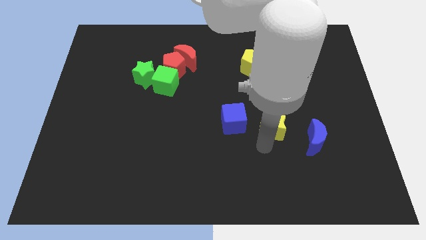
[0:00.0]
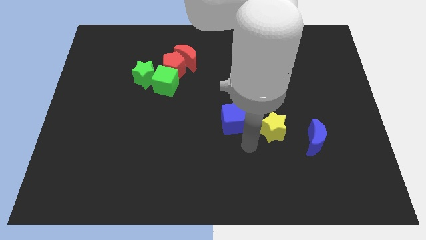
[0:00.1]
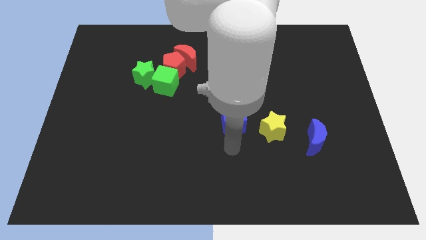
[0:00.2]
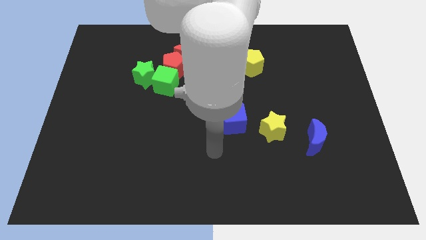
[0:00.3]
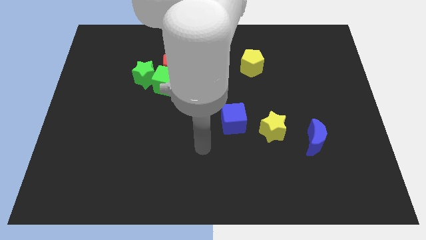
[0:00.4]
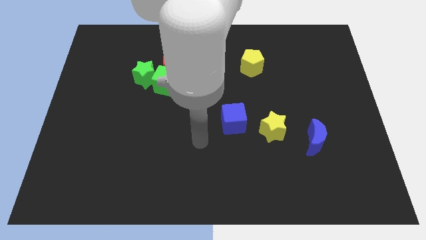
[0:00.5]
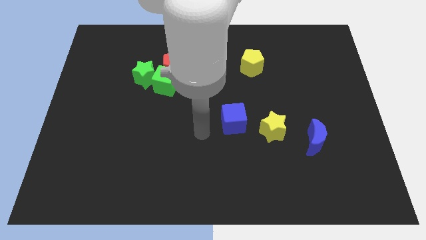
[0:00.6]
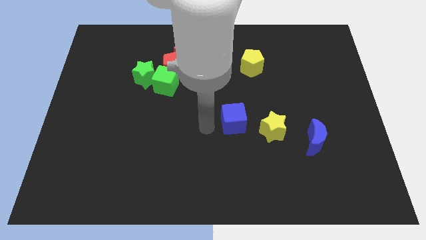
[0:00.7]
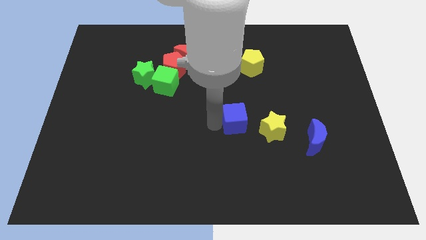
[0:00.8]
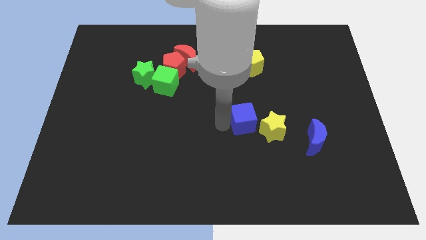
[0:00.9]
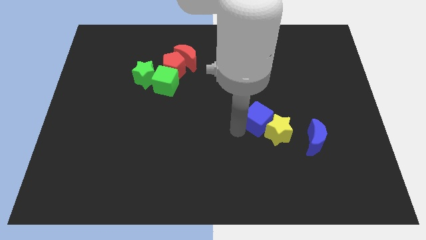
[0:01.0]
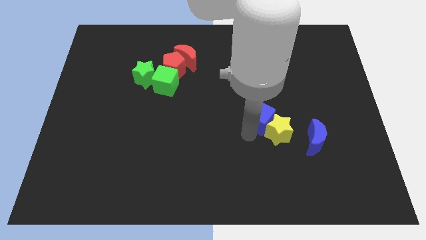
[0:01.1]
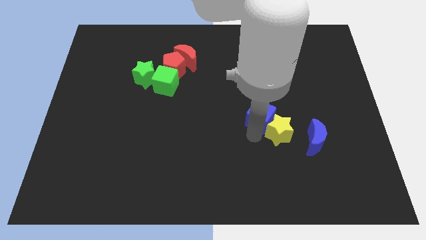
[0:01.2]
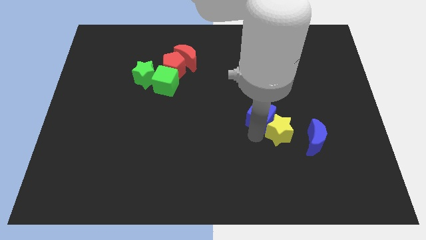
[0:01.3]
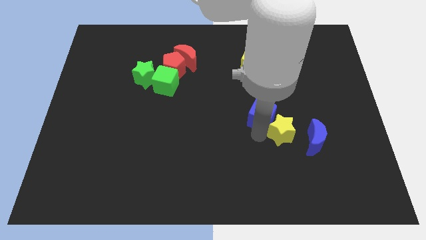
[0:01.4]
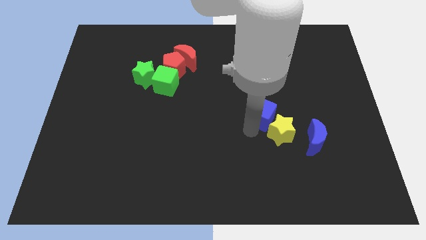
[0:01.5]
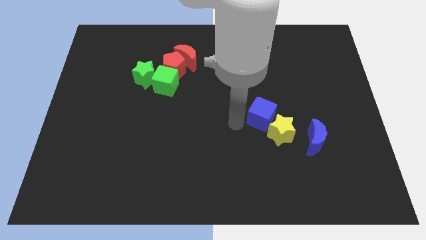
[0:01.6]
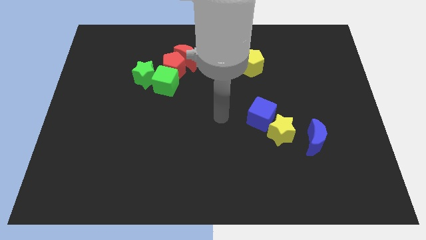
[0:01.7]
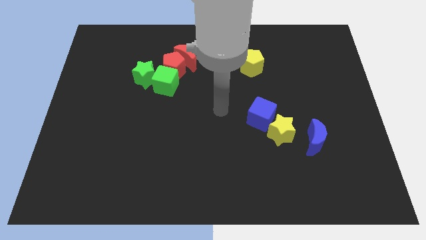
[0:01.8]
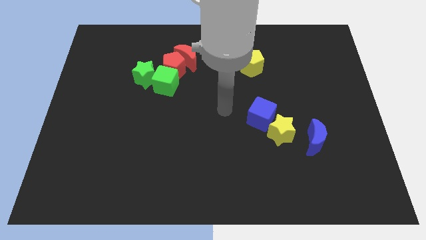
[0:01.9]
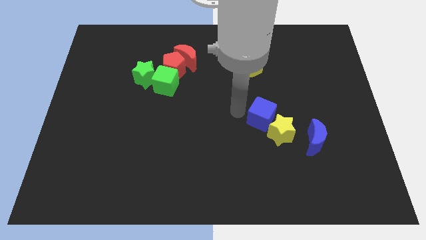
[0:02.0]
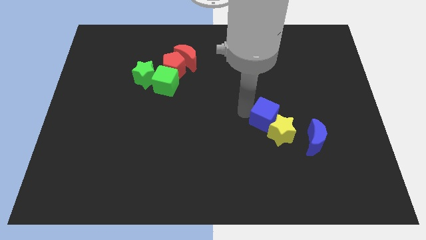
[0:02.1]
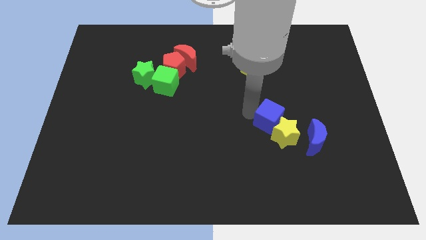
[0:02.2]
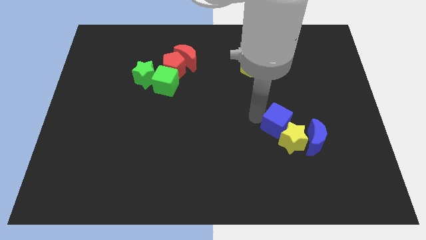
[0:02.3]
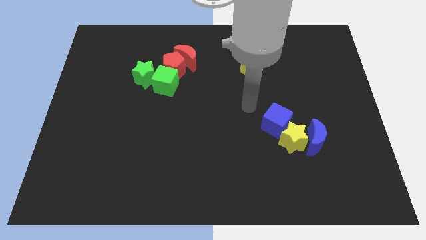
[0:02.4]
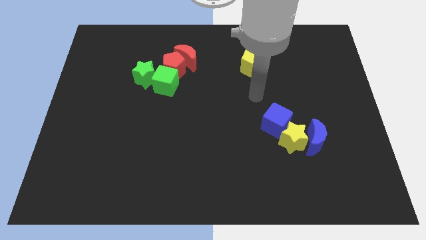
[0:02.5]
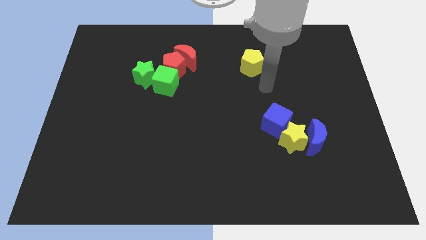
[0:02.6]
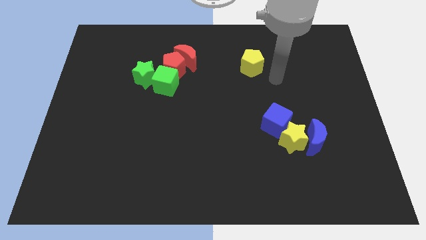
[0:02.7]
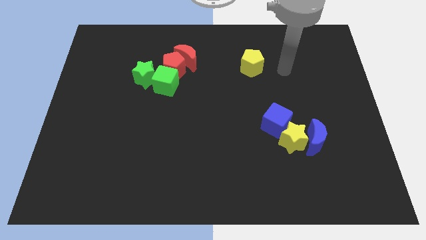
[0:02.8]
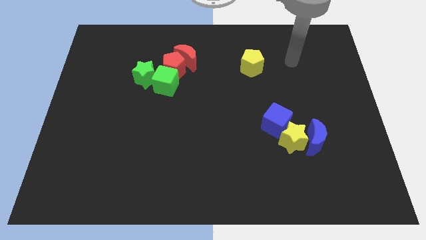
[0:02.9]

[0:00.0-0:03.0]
push the blue cube and yellow star close to the blue crescent

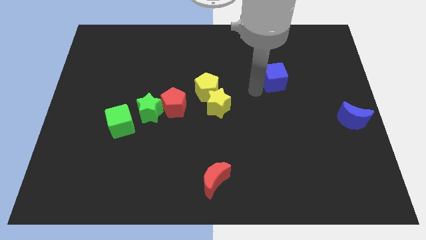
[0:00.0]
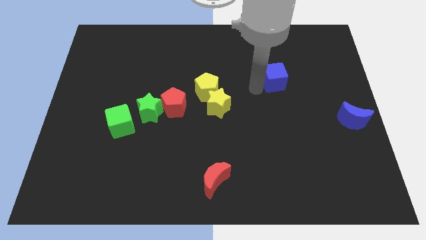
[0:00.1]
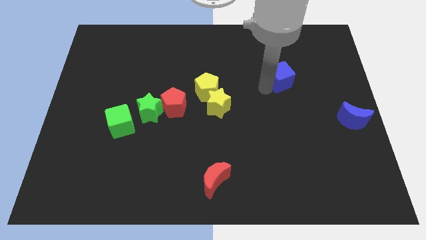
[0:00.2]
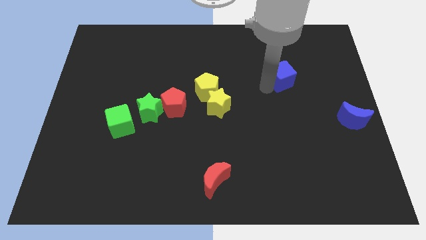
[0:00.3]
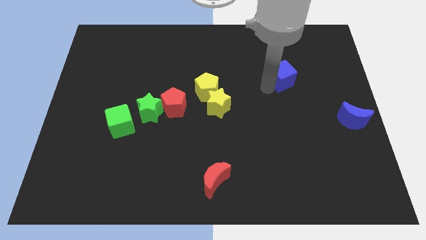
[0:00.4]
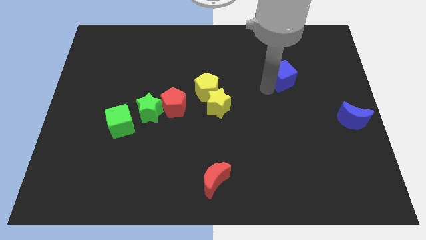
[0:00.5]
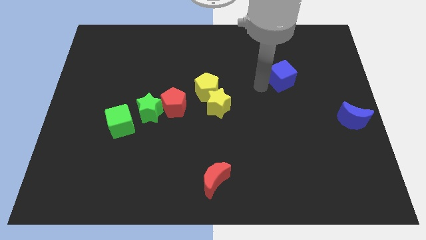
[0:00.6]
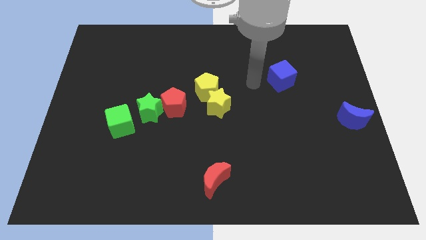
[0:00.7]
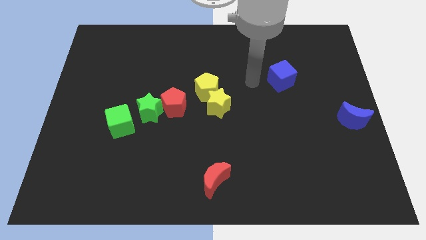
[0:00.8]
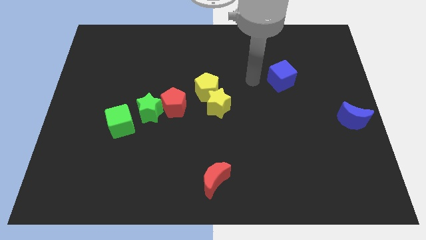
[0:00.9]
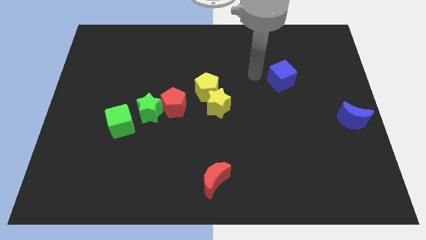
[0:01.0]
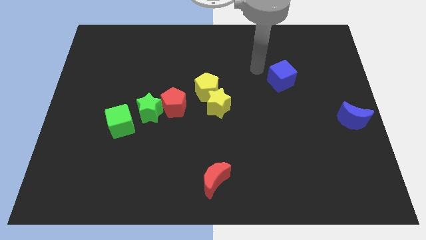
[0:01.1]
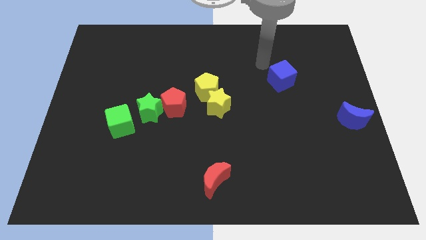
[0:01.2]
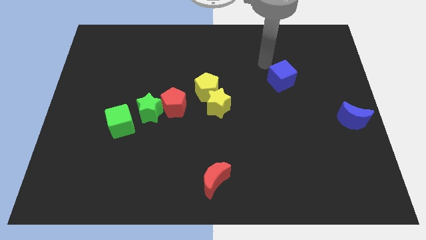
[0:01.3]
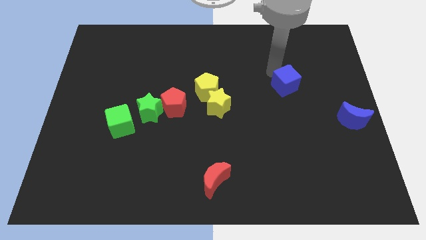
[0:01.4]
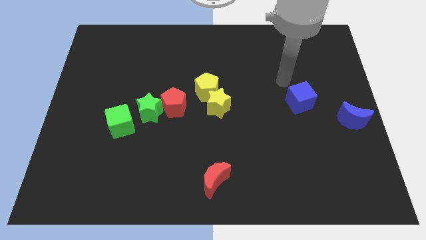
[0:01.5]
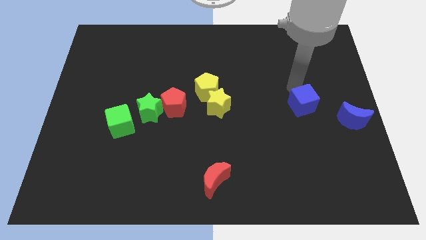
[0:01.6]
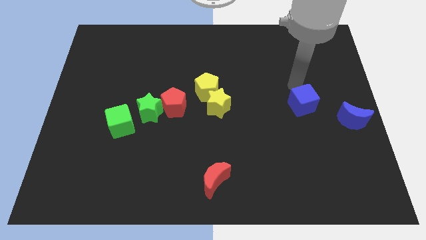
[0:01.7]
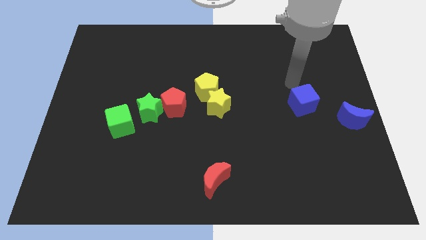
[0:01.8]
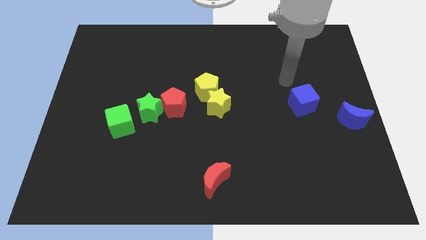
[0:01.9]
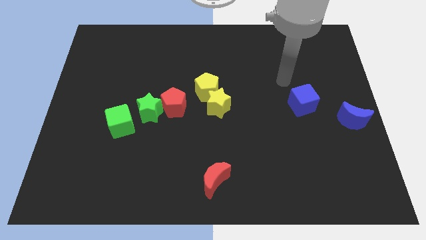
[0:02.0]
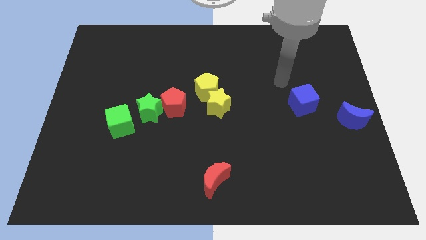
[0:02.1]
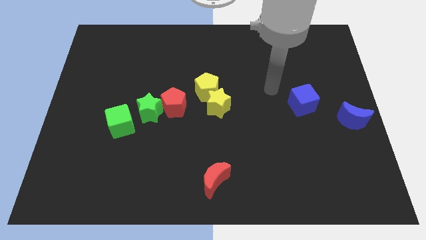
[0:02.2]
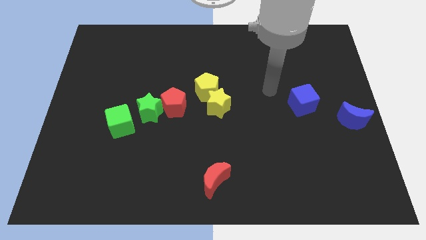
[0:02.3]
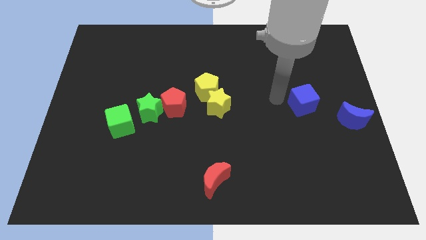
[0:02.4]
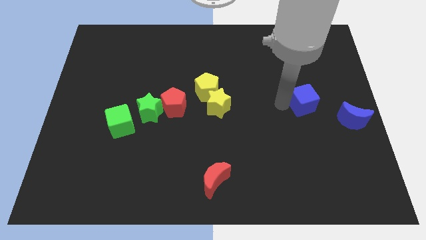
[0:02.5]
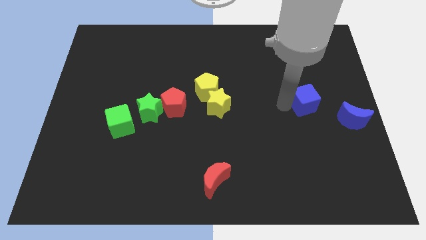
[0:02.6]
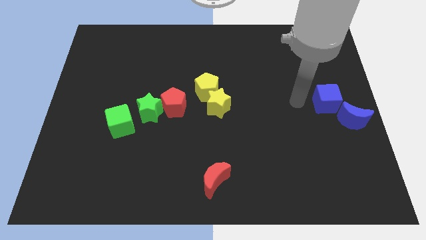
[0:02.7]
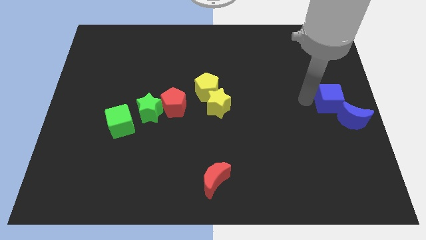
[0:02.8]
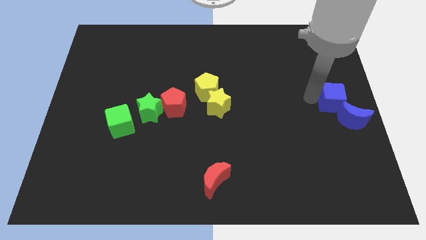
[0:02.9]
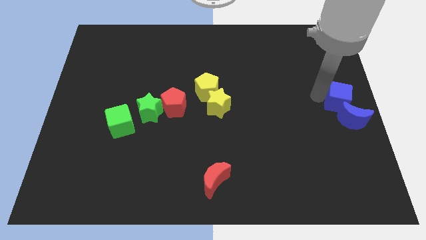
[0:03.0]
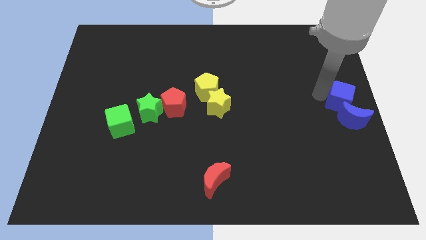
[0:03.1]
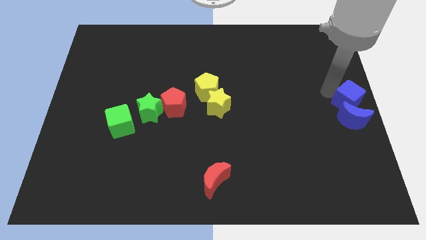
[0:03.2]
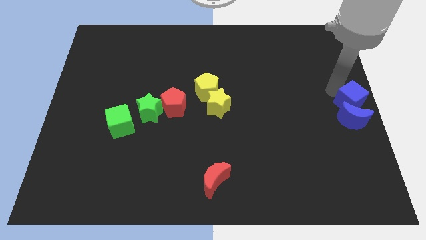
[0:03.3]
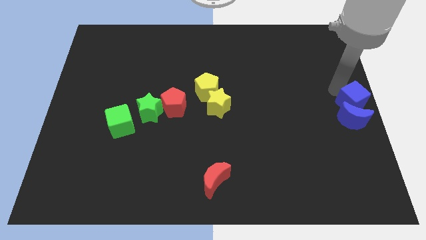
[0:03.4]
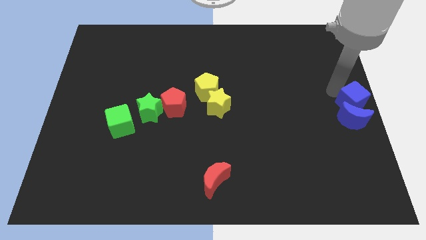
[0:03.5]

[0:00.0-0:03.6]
move blue cube into blue crescent

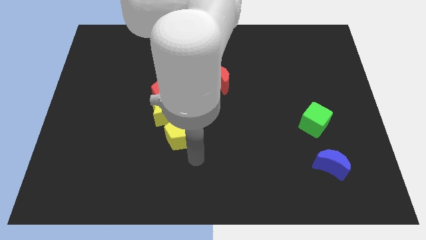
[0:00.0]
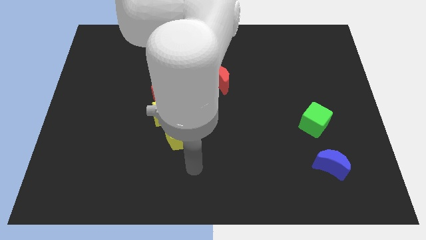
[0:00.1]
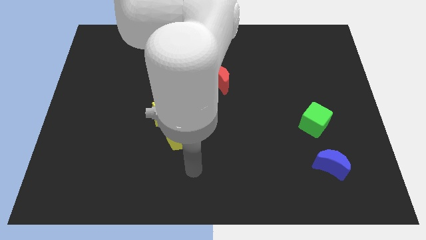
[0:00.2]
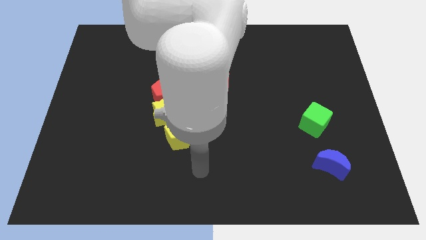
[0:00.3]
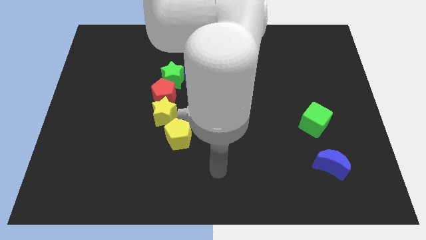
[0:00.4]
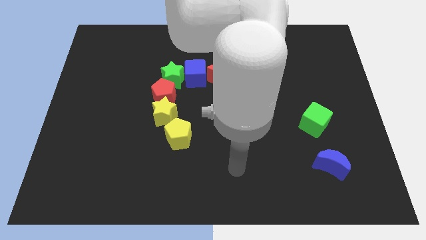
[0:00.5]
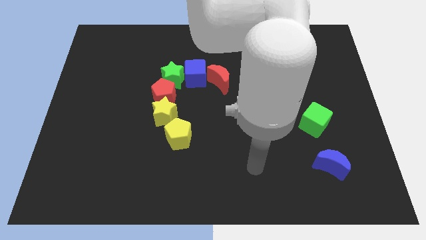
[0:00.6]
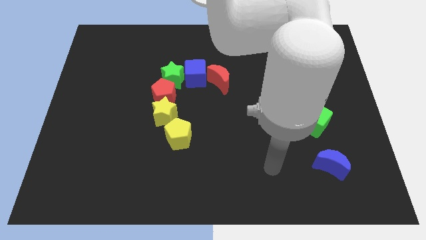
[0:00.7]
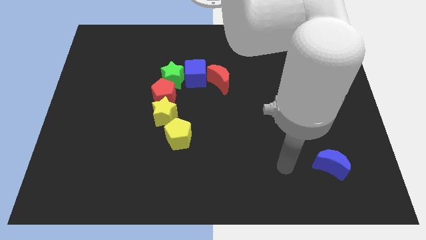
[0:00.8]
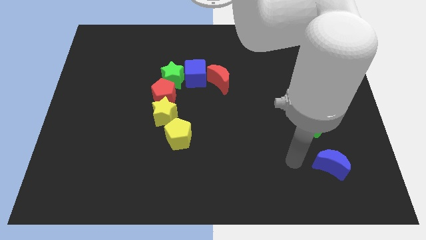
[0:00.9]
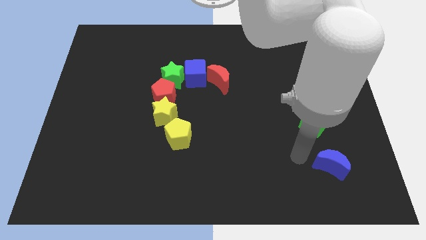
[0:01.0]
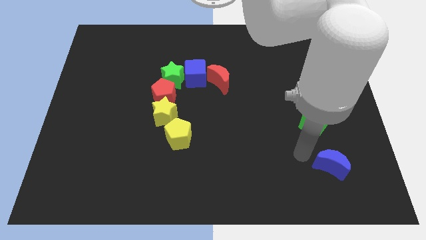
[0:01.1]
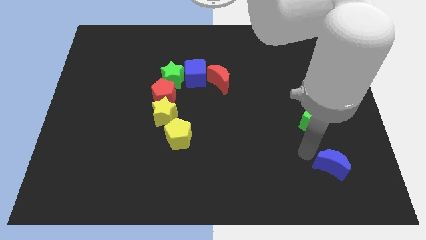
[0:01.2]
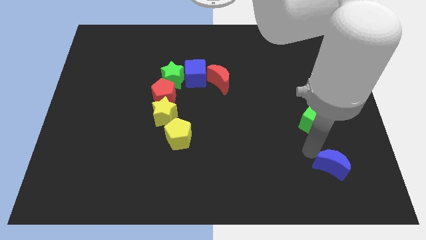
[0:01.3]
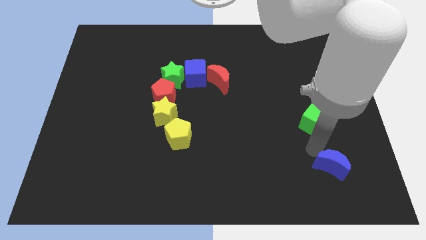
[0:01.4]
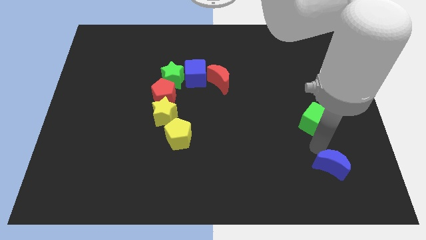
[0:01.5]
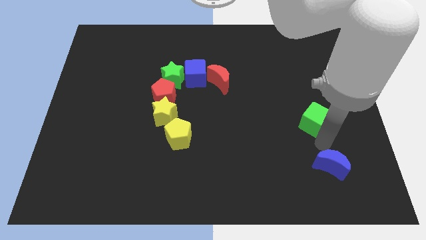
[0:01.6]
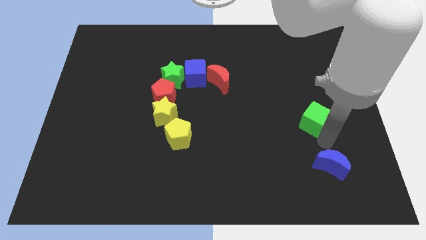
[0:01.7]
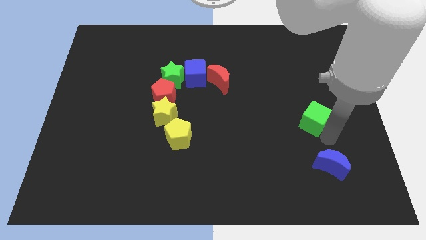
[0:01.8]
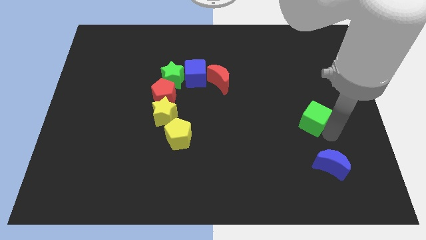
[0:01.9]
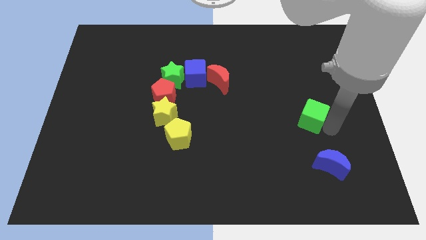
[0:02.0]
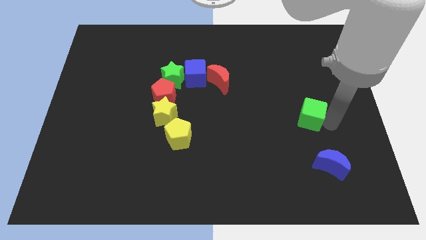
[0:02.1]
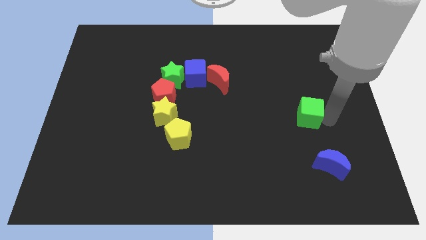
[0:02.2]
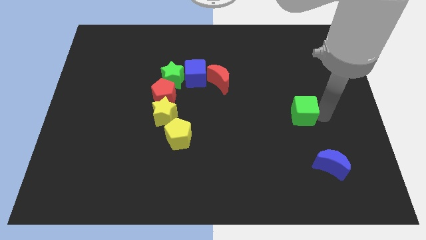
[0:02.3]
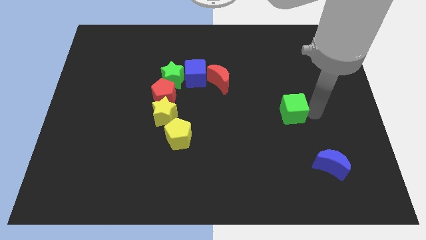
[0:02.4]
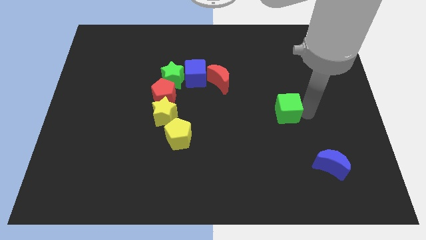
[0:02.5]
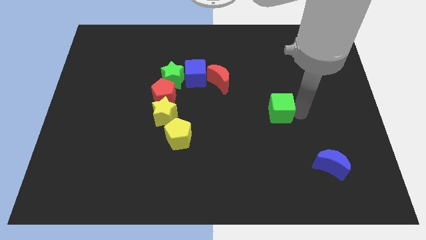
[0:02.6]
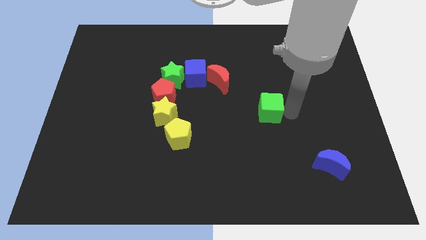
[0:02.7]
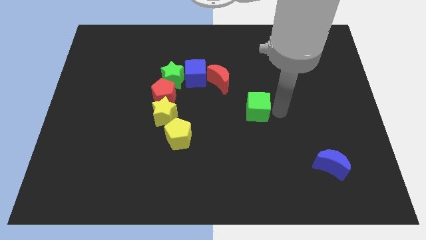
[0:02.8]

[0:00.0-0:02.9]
place the green cube diagonally top left to the blue moon
